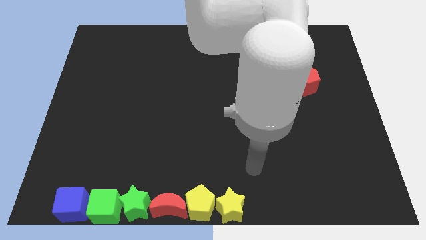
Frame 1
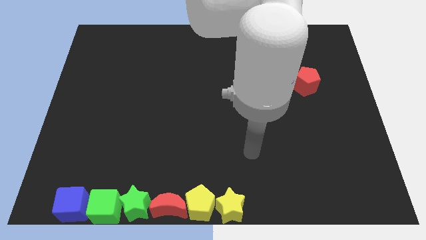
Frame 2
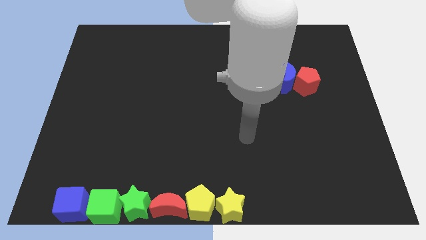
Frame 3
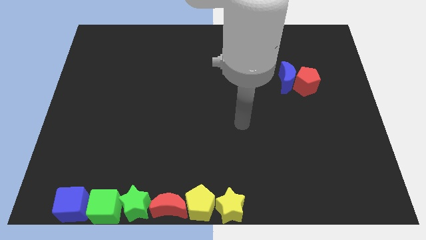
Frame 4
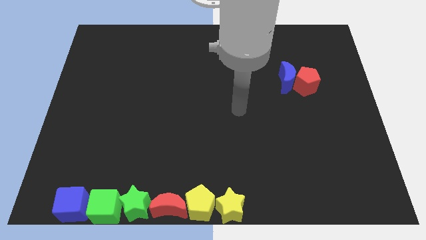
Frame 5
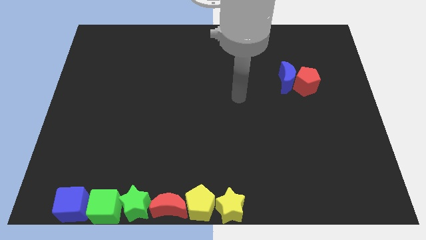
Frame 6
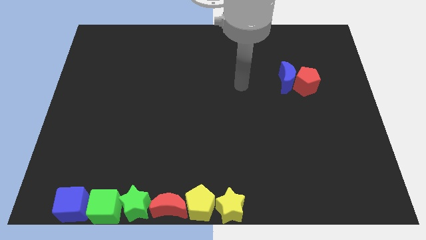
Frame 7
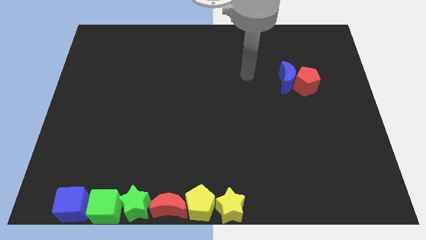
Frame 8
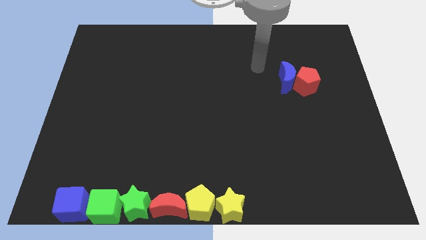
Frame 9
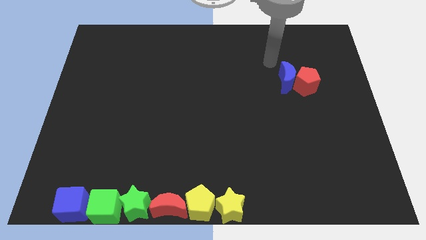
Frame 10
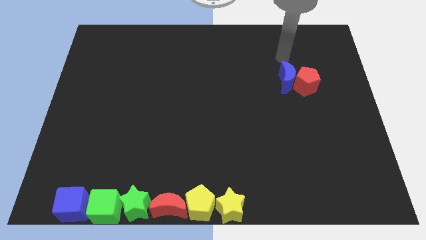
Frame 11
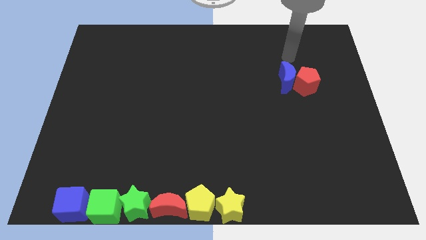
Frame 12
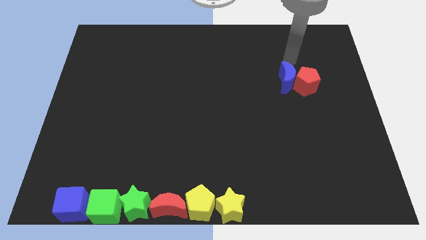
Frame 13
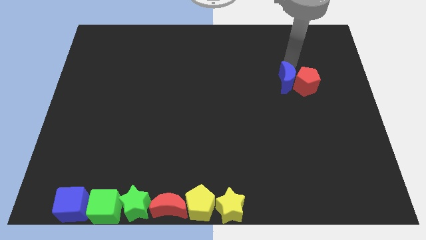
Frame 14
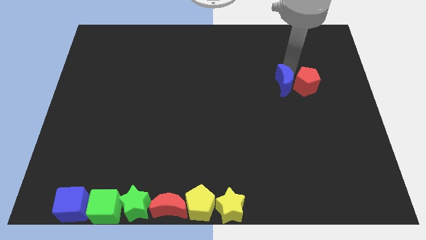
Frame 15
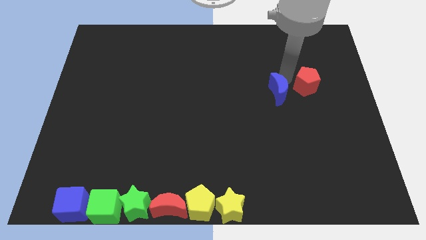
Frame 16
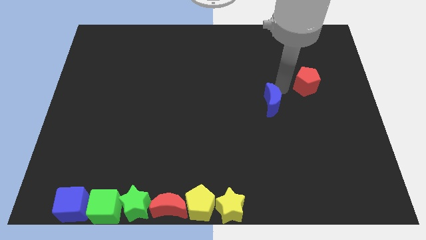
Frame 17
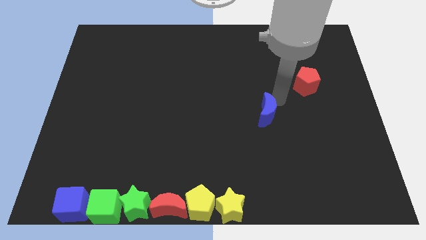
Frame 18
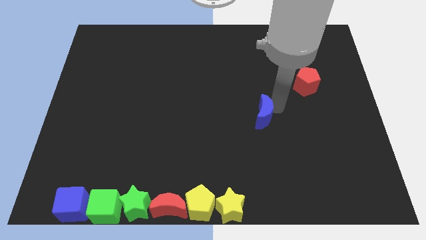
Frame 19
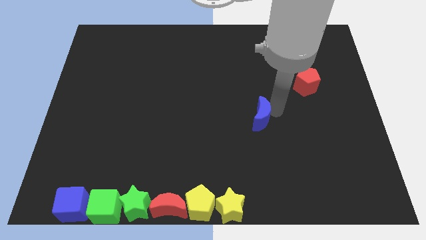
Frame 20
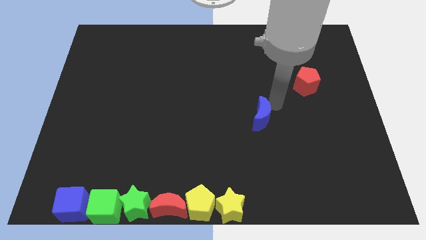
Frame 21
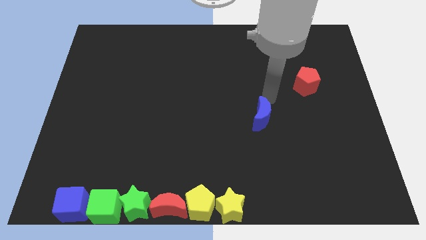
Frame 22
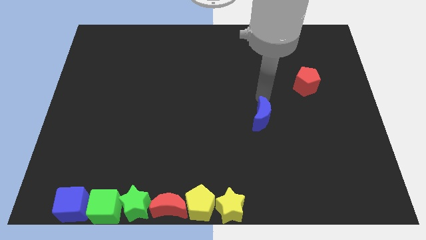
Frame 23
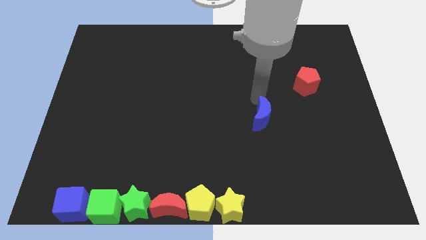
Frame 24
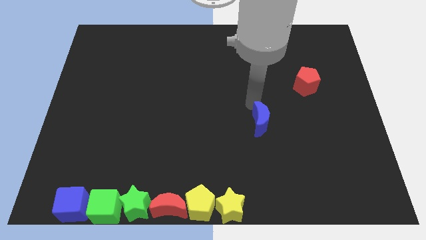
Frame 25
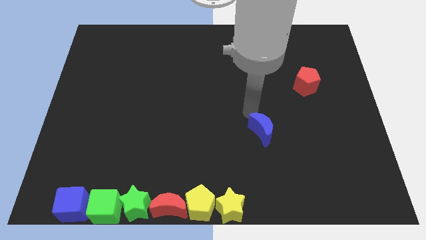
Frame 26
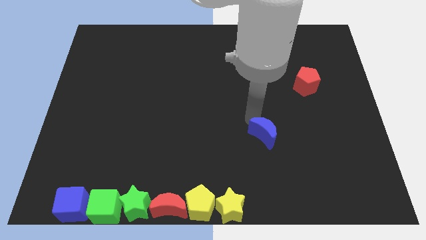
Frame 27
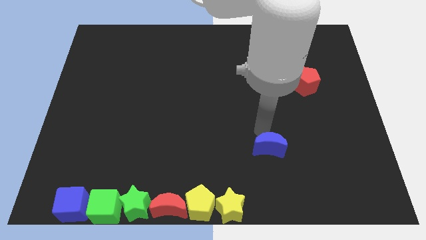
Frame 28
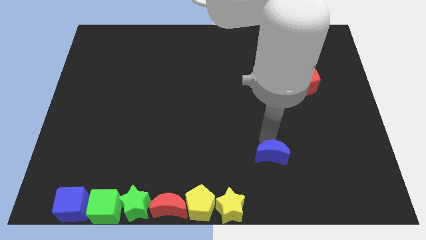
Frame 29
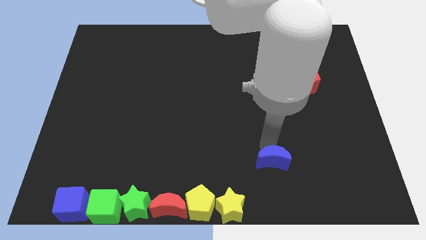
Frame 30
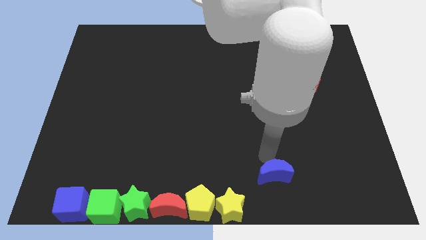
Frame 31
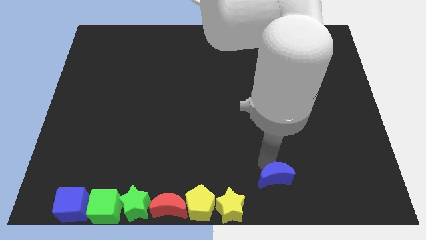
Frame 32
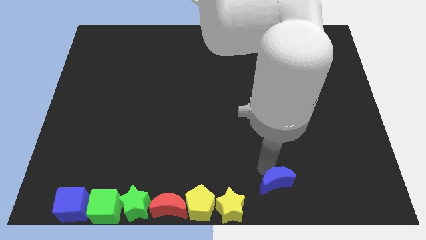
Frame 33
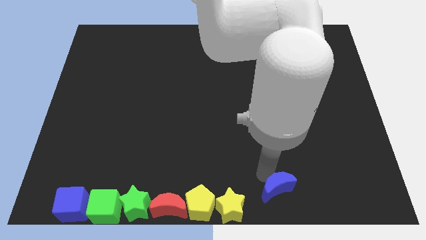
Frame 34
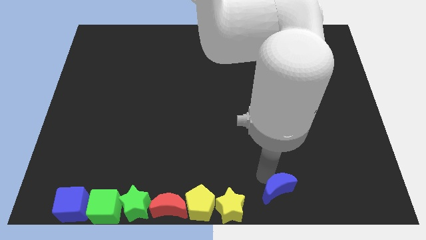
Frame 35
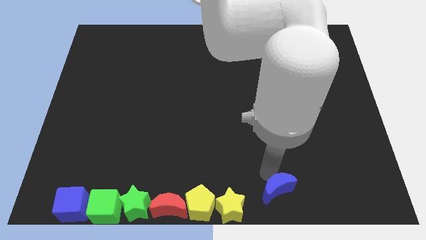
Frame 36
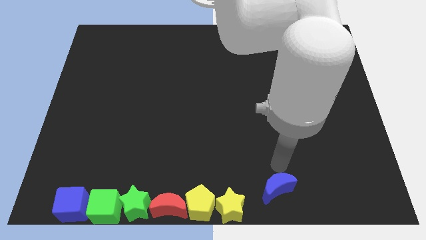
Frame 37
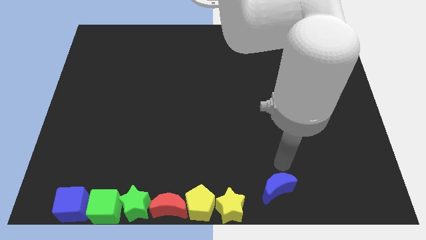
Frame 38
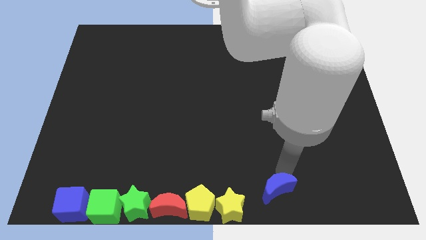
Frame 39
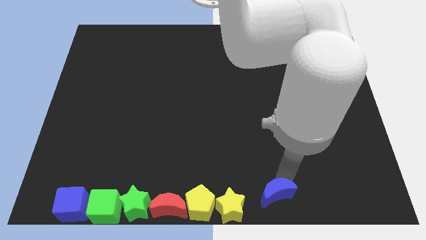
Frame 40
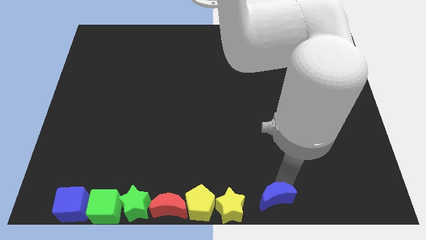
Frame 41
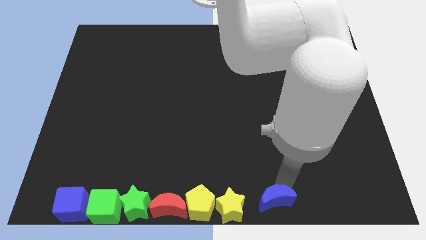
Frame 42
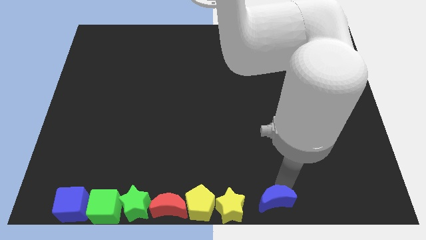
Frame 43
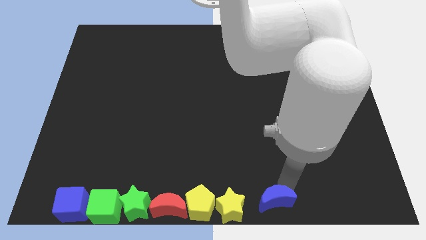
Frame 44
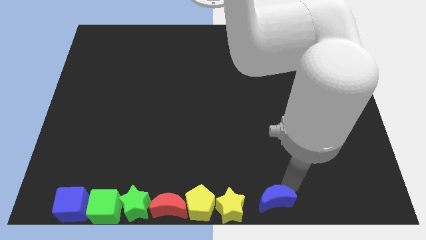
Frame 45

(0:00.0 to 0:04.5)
move the blue crescent to the right of the yellow star

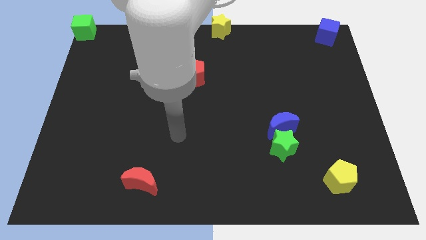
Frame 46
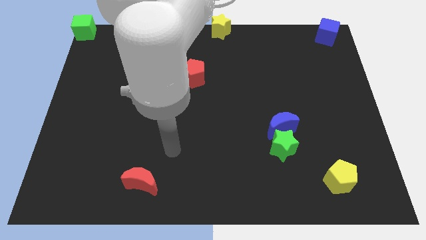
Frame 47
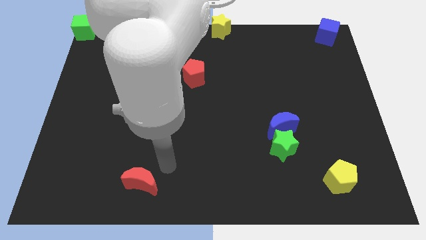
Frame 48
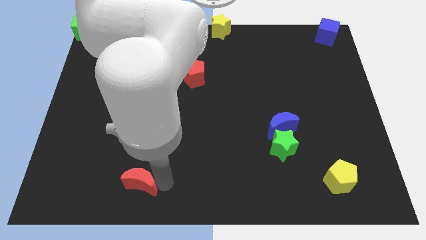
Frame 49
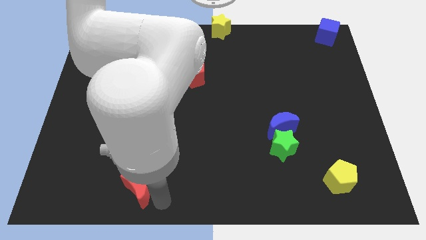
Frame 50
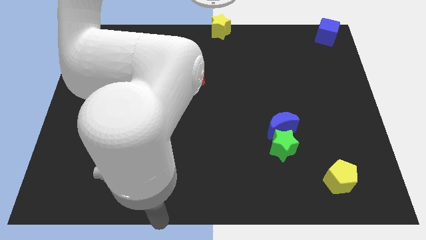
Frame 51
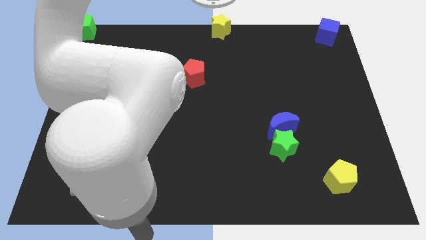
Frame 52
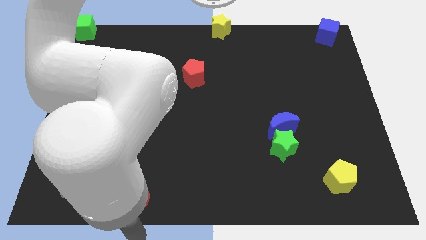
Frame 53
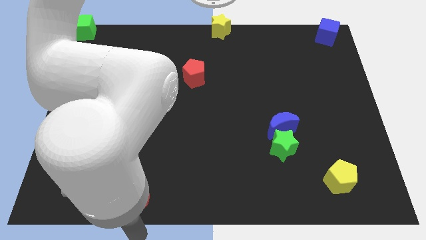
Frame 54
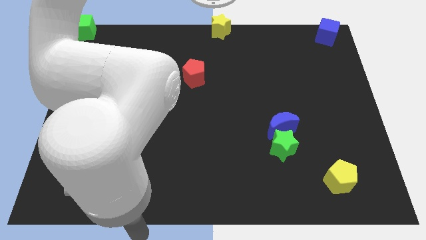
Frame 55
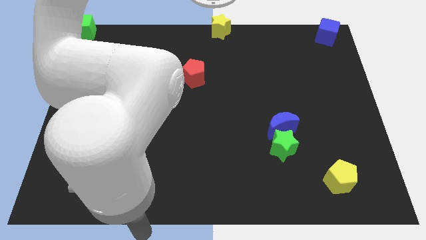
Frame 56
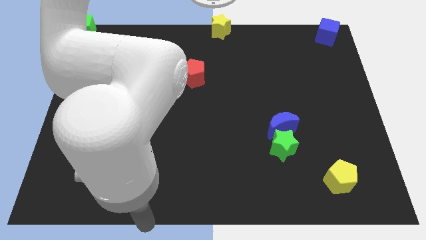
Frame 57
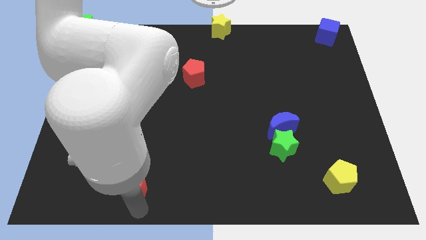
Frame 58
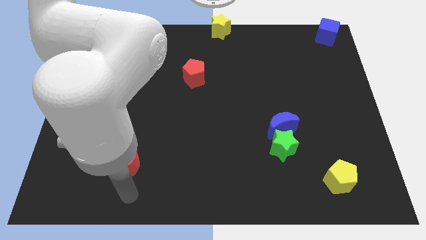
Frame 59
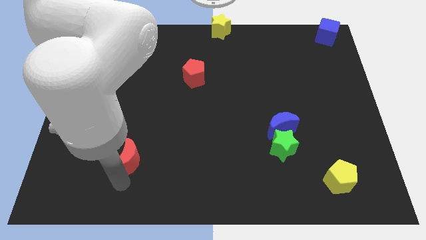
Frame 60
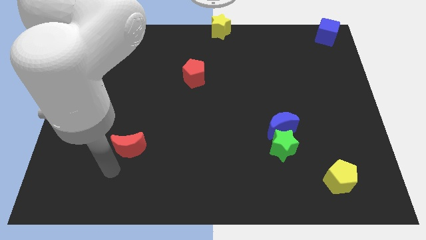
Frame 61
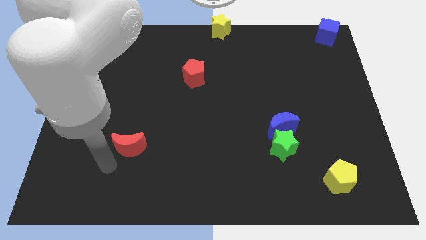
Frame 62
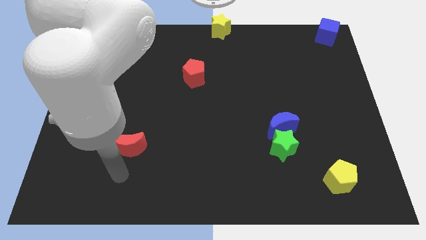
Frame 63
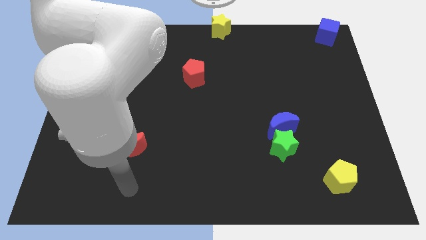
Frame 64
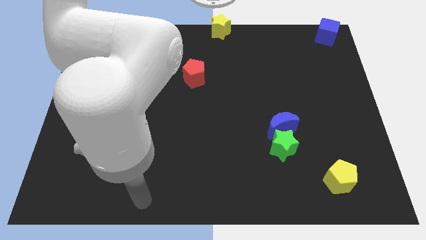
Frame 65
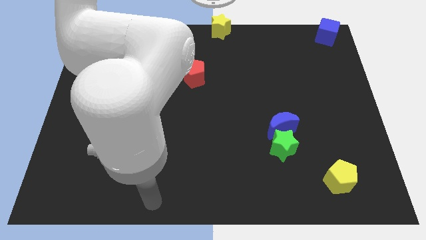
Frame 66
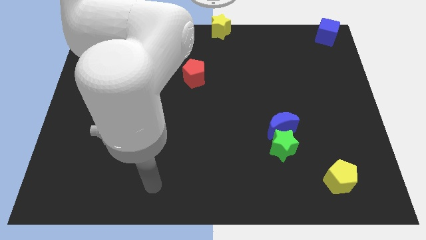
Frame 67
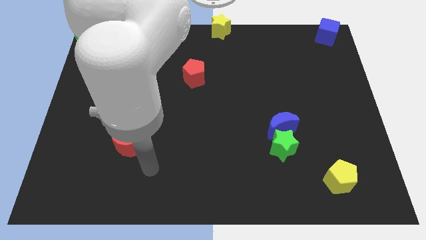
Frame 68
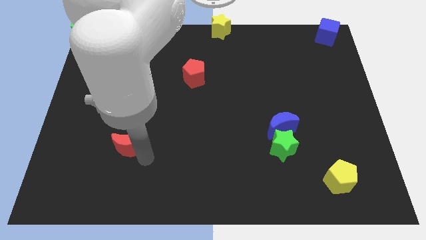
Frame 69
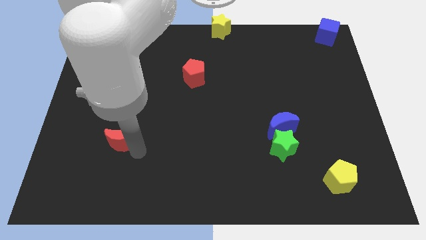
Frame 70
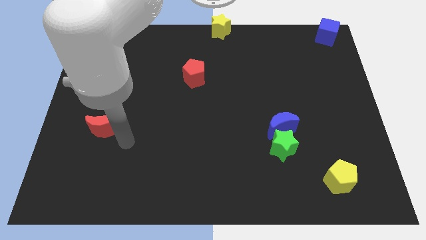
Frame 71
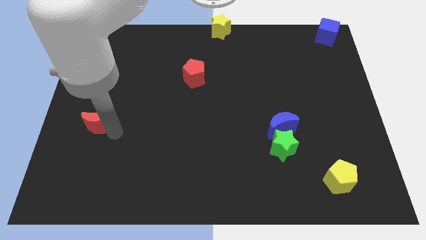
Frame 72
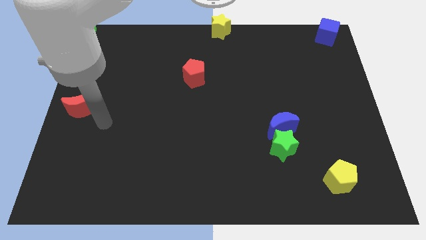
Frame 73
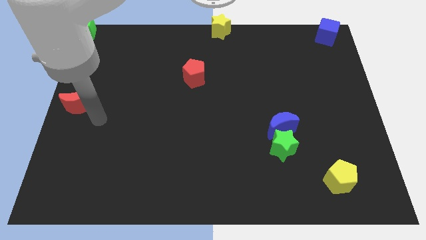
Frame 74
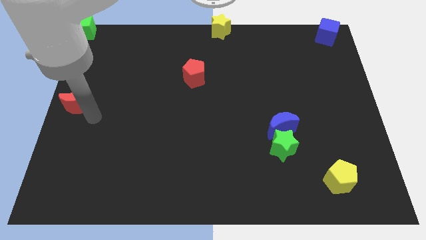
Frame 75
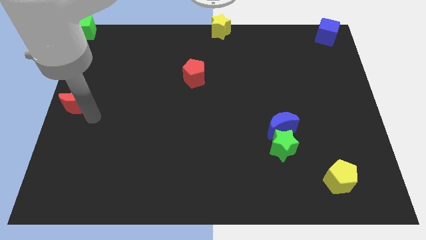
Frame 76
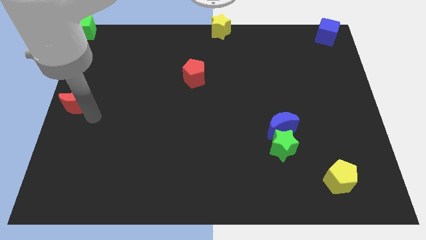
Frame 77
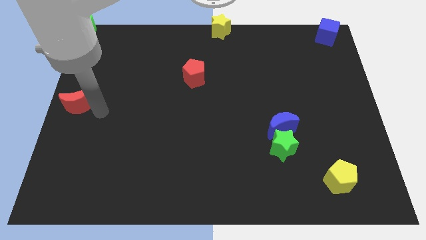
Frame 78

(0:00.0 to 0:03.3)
place red moon at center left

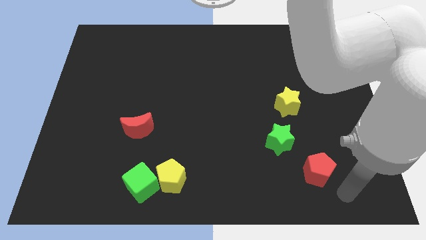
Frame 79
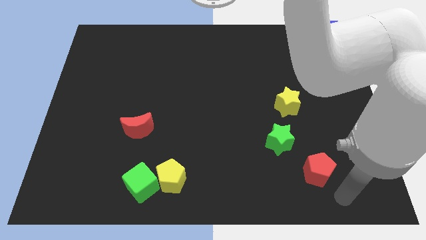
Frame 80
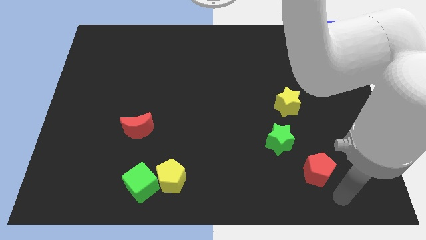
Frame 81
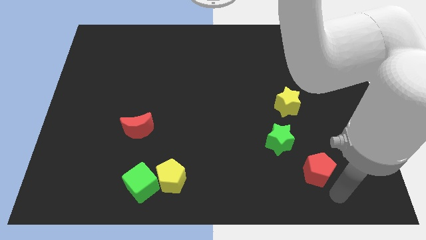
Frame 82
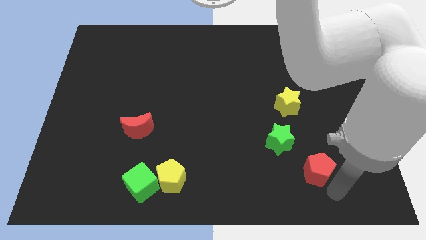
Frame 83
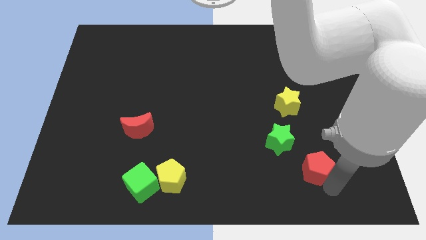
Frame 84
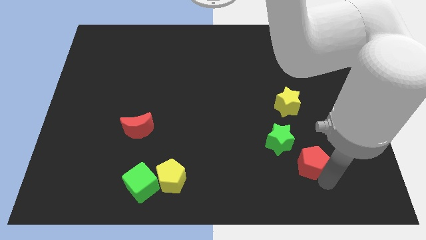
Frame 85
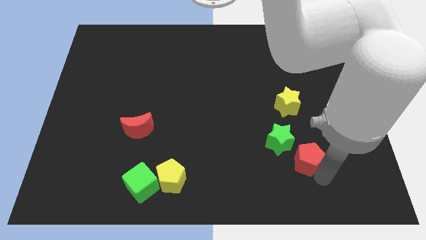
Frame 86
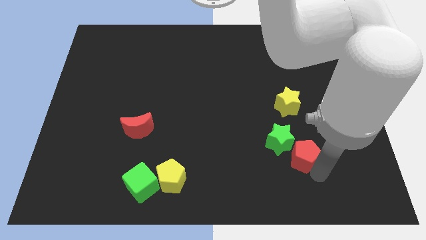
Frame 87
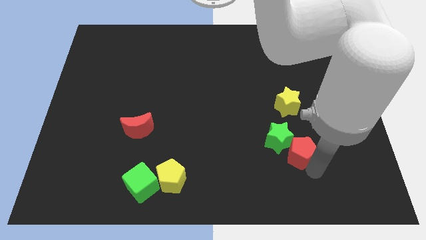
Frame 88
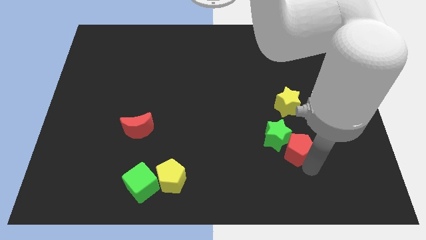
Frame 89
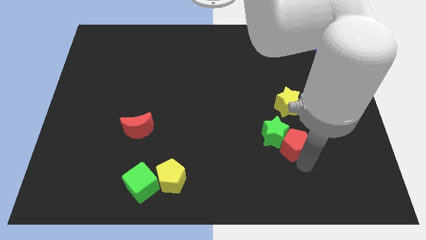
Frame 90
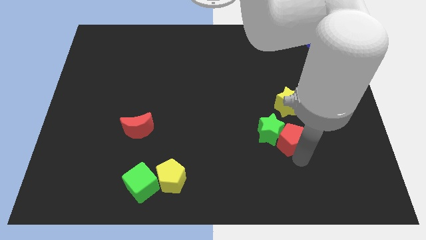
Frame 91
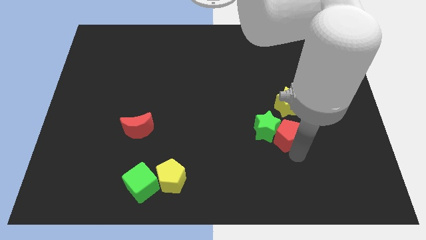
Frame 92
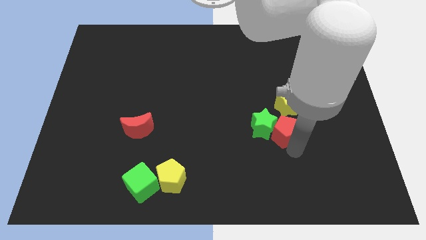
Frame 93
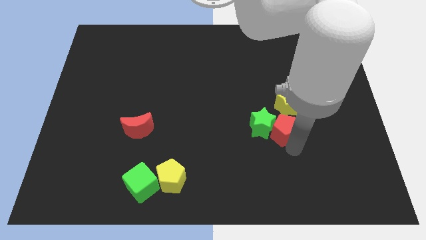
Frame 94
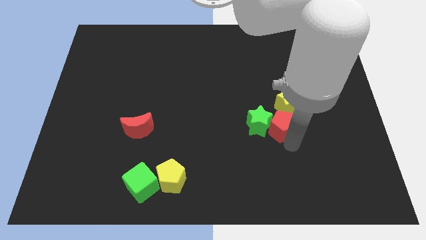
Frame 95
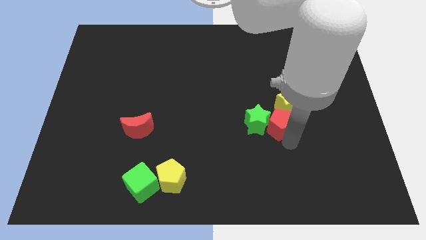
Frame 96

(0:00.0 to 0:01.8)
move the red pentagon to the bottom of the yellow star
